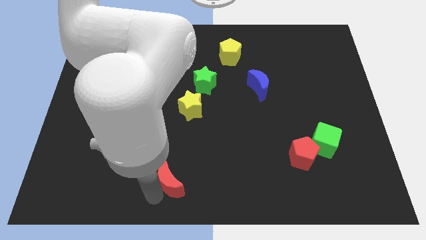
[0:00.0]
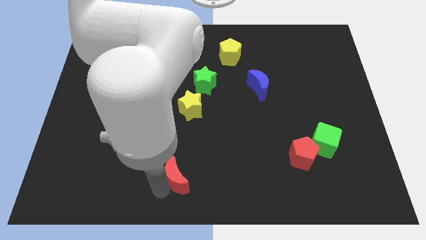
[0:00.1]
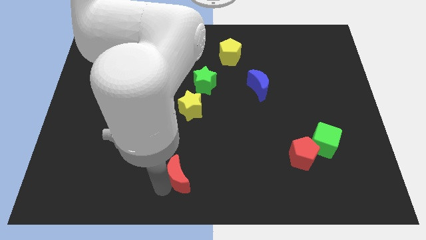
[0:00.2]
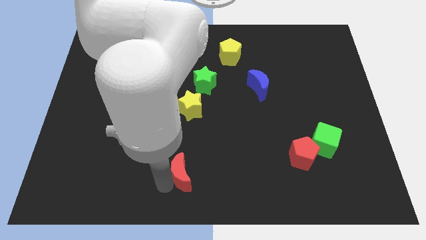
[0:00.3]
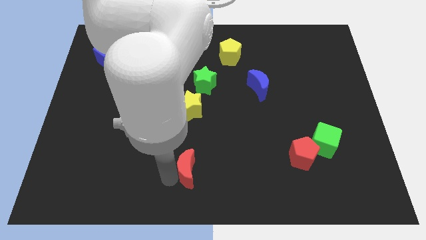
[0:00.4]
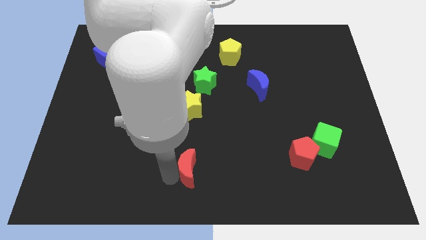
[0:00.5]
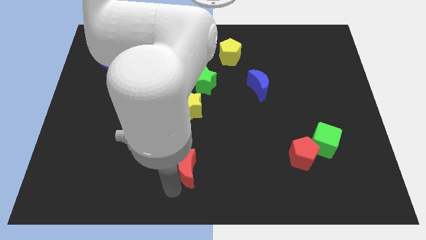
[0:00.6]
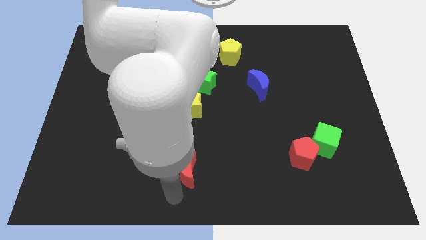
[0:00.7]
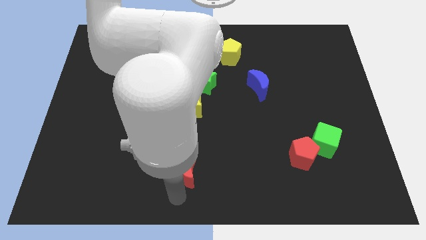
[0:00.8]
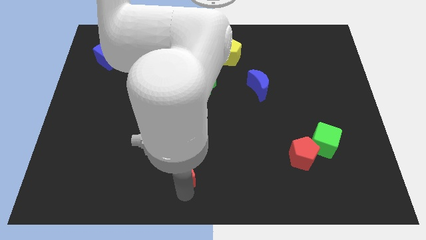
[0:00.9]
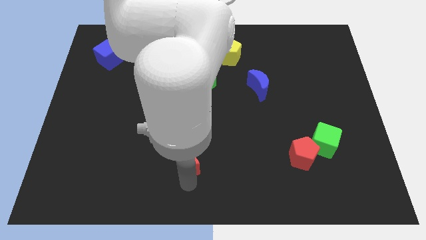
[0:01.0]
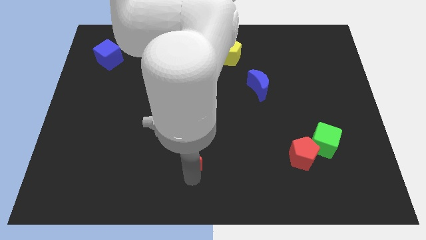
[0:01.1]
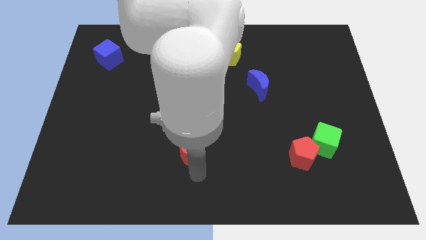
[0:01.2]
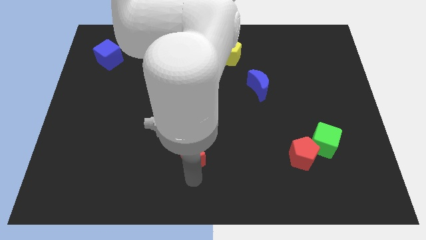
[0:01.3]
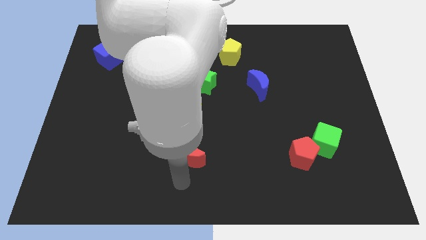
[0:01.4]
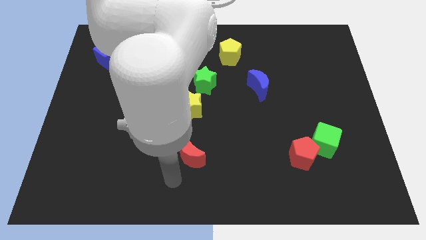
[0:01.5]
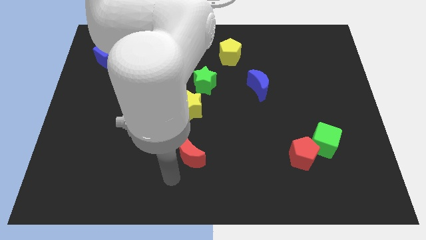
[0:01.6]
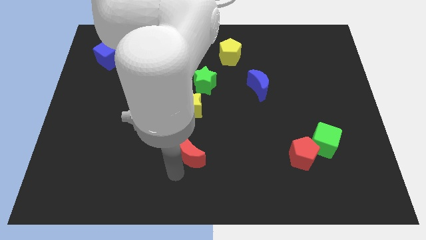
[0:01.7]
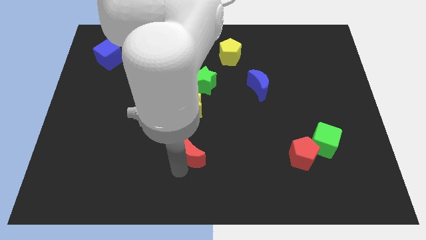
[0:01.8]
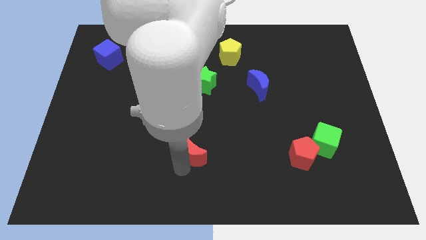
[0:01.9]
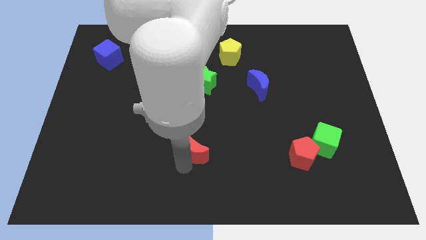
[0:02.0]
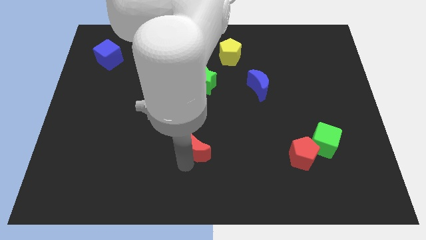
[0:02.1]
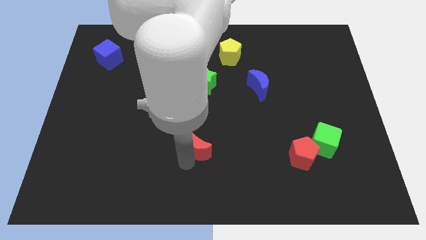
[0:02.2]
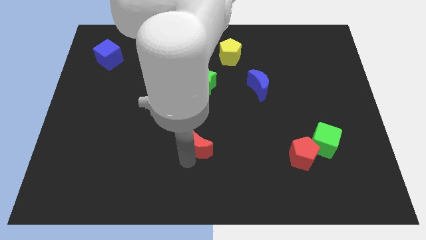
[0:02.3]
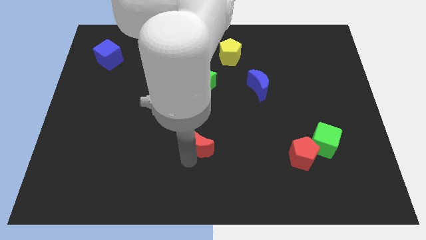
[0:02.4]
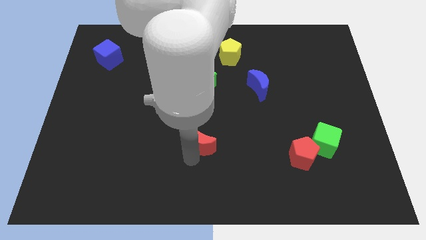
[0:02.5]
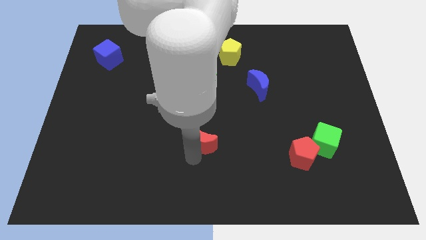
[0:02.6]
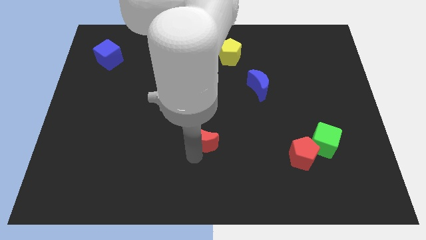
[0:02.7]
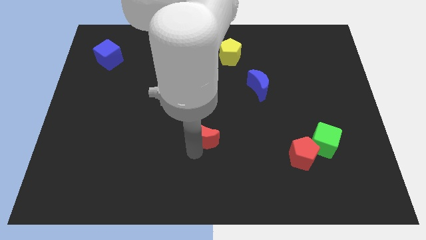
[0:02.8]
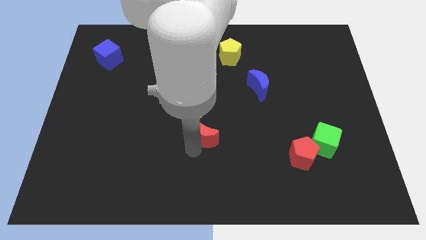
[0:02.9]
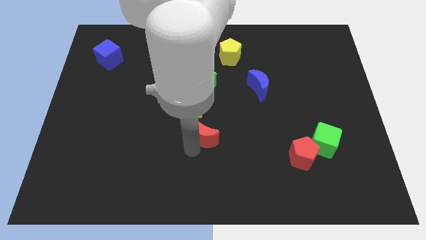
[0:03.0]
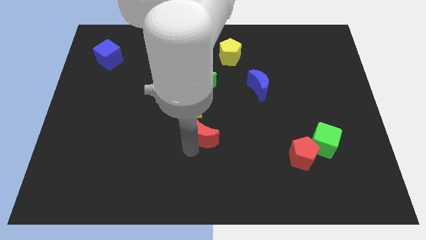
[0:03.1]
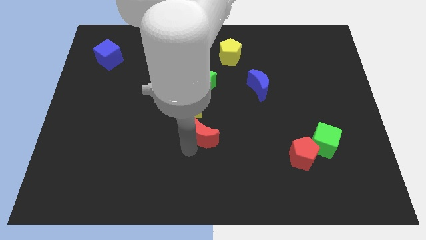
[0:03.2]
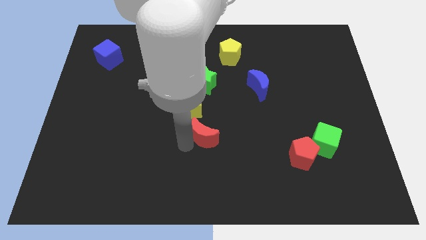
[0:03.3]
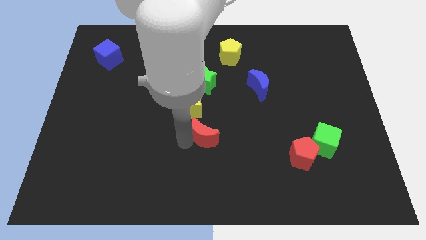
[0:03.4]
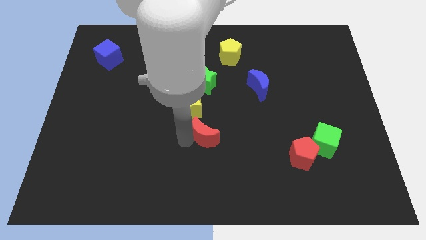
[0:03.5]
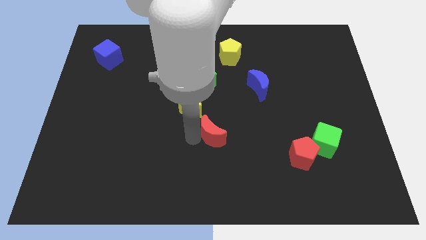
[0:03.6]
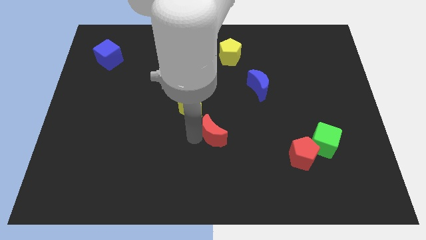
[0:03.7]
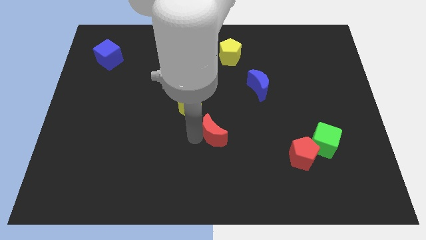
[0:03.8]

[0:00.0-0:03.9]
slightly move the red moon diagonally bottom to the yellow star
